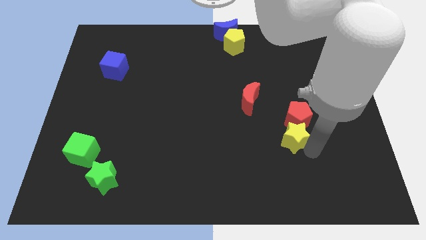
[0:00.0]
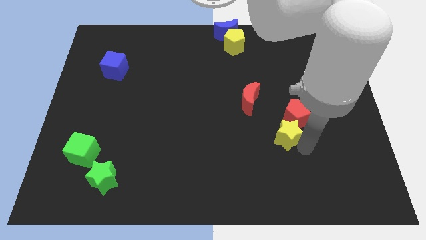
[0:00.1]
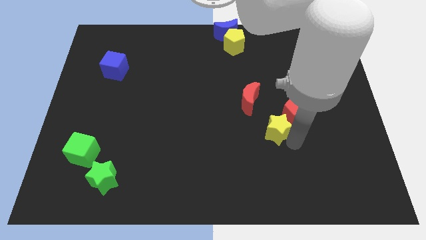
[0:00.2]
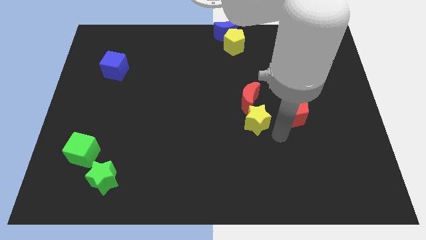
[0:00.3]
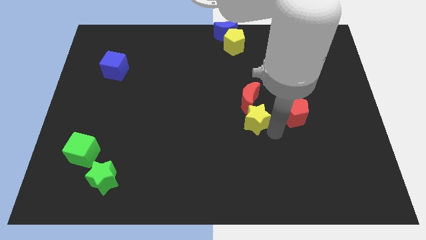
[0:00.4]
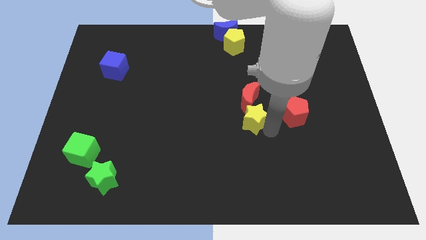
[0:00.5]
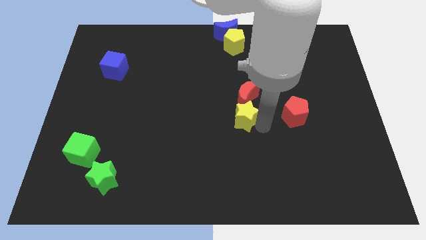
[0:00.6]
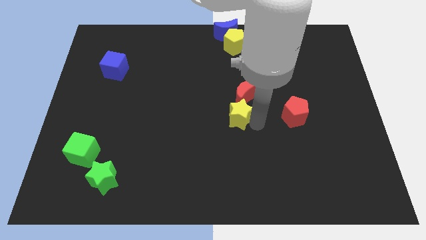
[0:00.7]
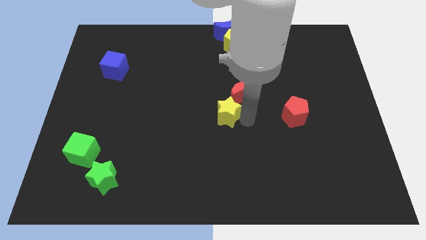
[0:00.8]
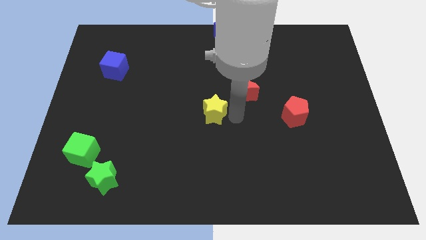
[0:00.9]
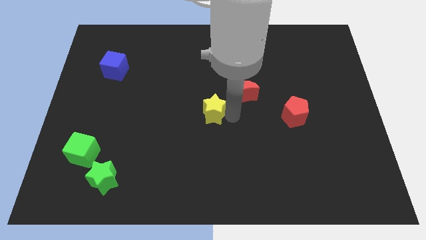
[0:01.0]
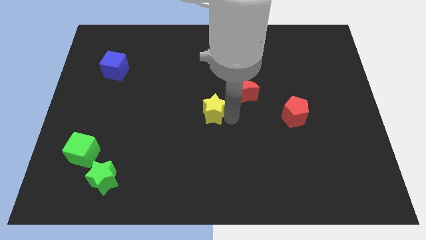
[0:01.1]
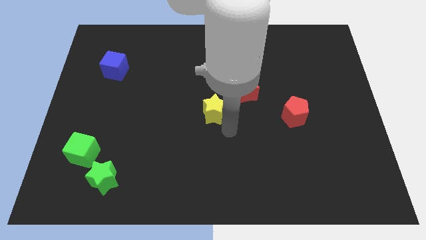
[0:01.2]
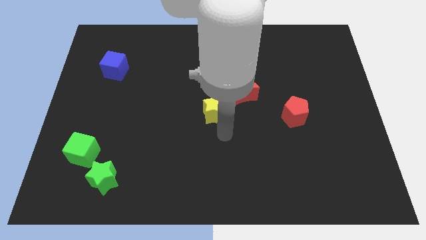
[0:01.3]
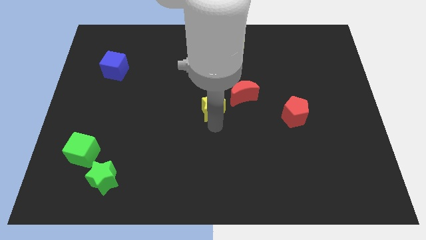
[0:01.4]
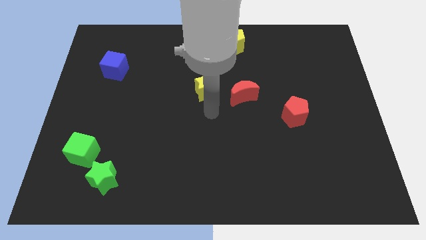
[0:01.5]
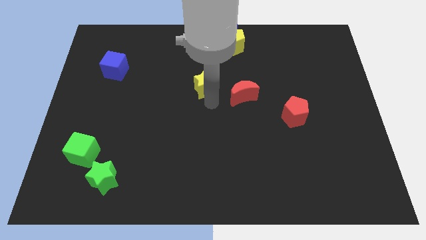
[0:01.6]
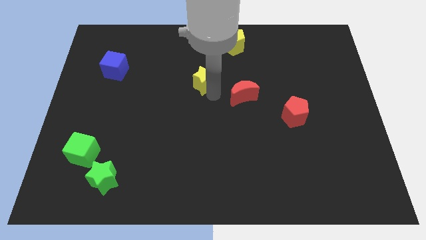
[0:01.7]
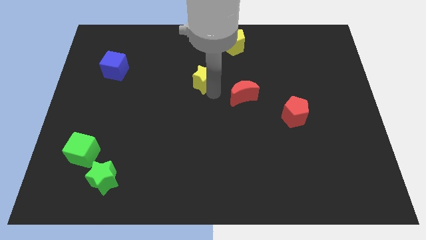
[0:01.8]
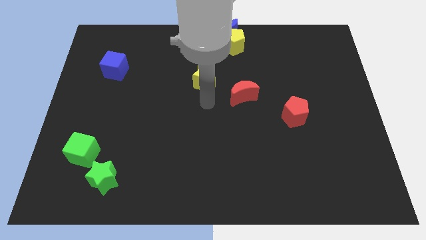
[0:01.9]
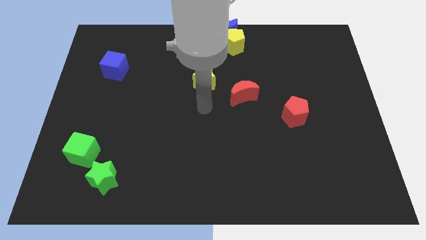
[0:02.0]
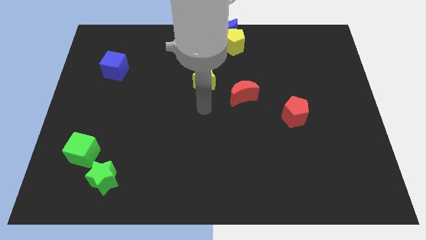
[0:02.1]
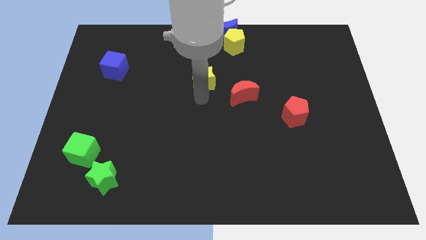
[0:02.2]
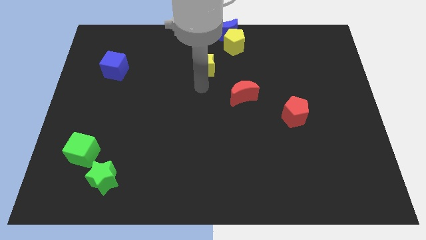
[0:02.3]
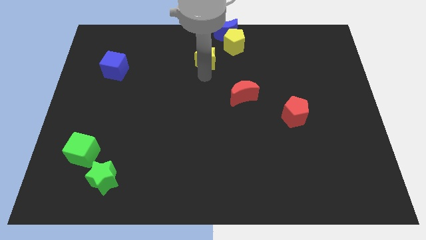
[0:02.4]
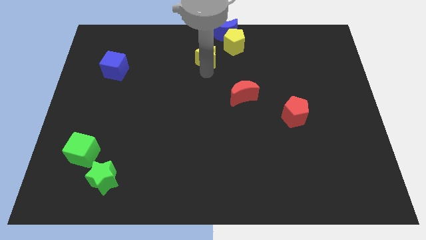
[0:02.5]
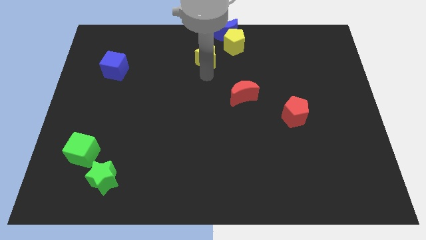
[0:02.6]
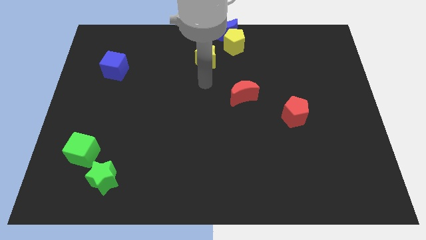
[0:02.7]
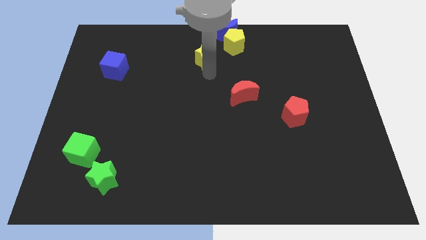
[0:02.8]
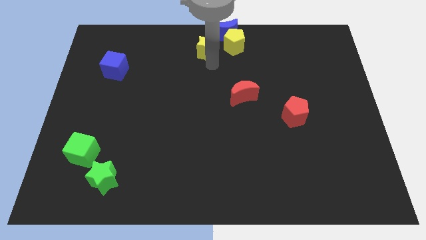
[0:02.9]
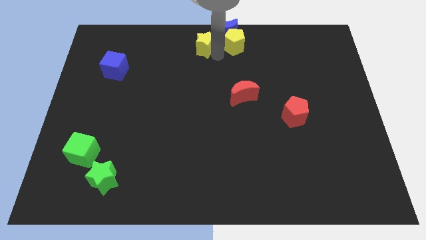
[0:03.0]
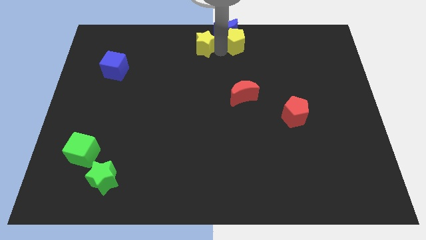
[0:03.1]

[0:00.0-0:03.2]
separate the yellow star from red pentagon

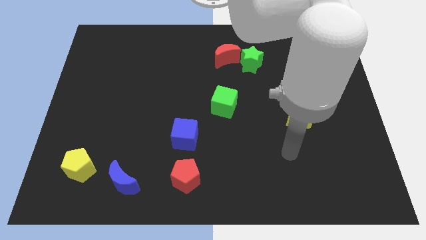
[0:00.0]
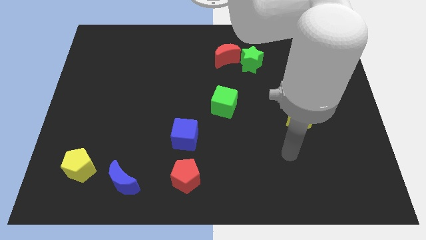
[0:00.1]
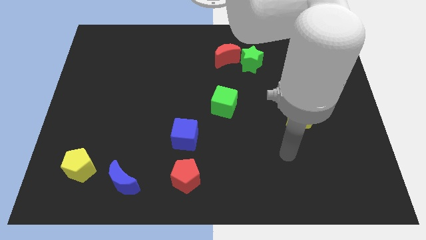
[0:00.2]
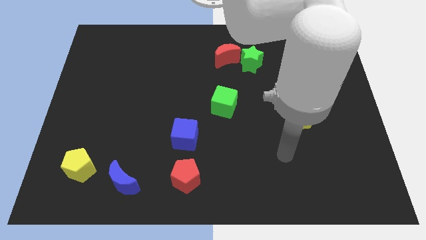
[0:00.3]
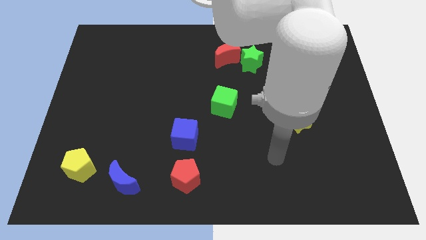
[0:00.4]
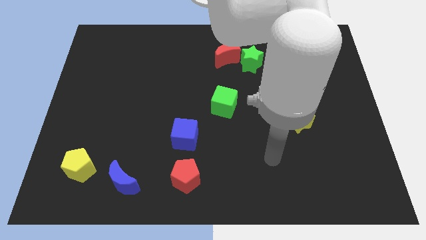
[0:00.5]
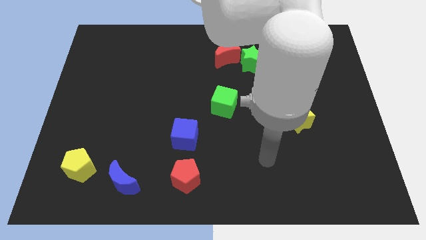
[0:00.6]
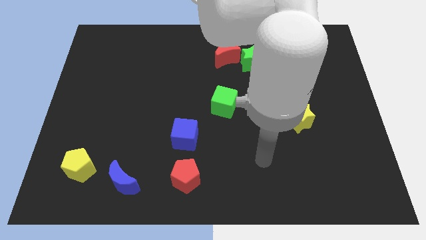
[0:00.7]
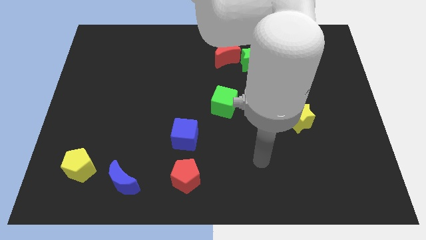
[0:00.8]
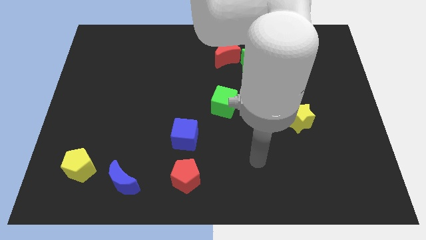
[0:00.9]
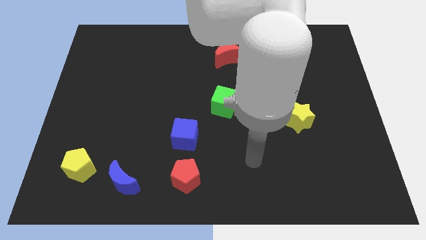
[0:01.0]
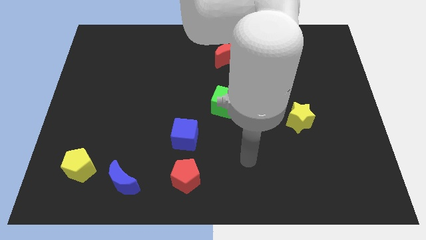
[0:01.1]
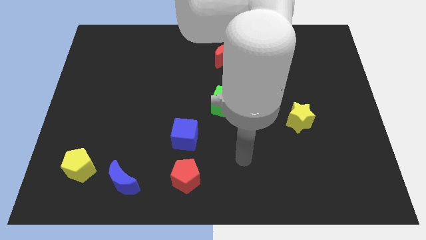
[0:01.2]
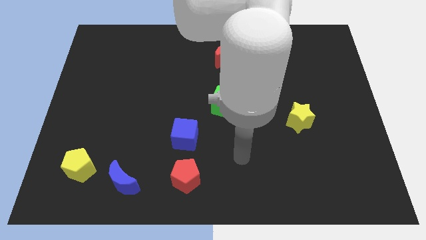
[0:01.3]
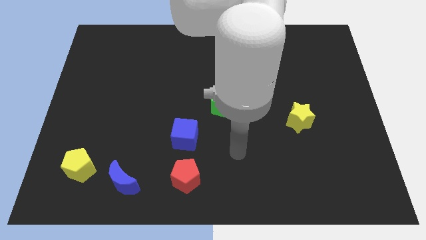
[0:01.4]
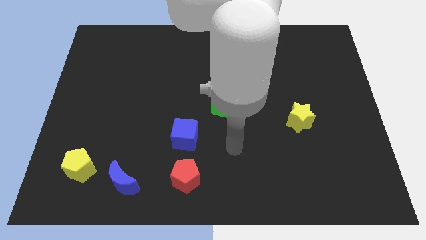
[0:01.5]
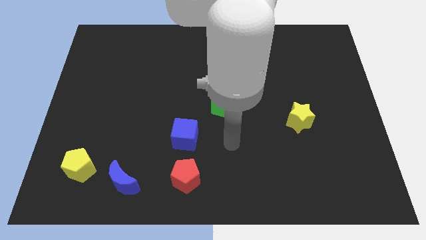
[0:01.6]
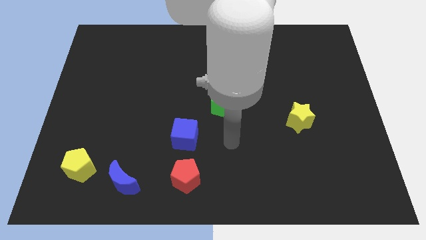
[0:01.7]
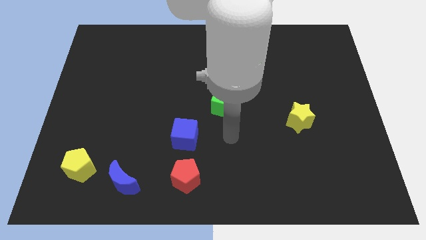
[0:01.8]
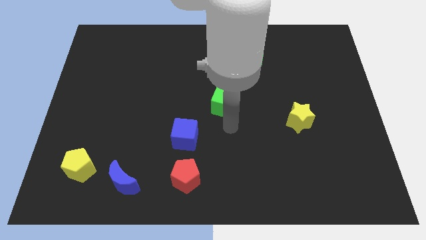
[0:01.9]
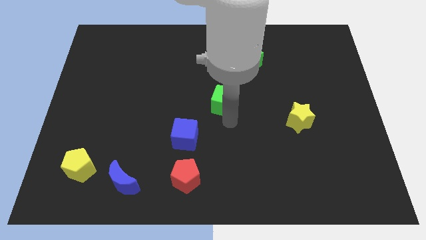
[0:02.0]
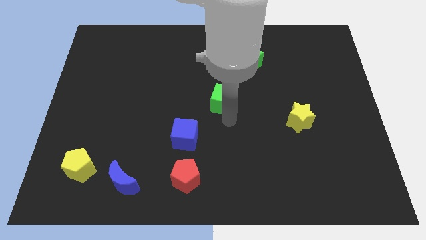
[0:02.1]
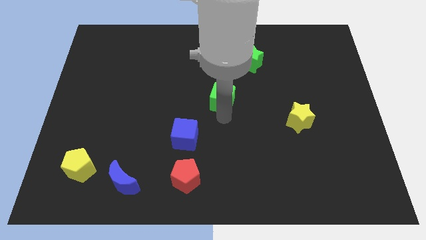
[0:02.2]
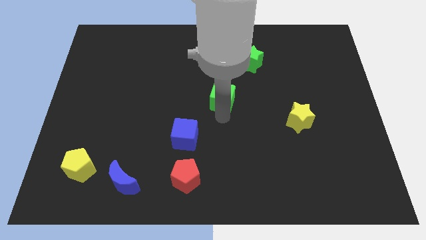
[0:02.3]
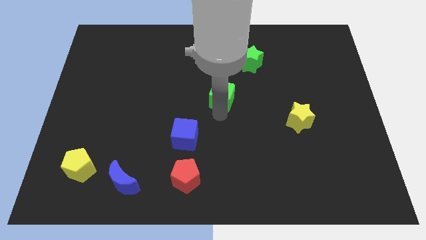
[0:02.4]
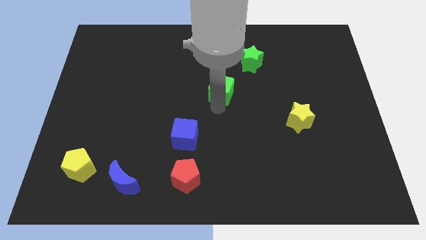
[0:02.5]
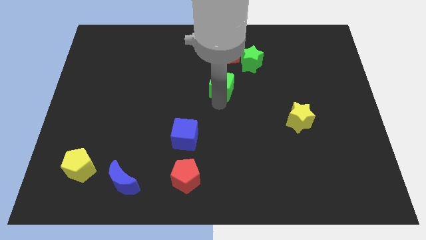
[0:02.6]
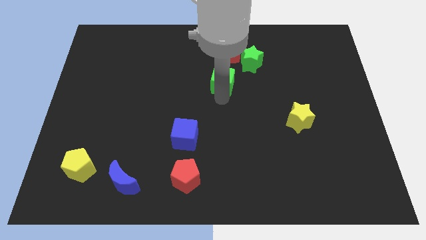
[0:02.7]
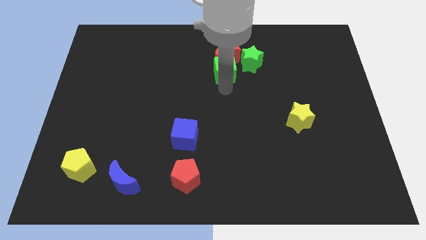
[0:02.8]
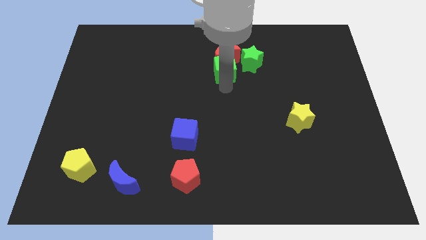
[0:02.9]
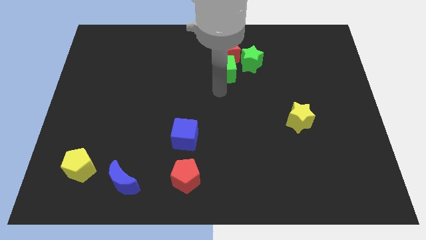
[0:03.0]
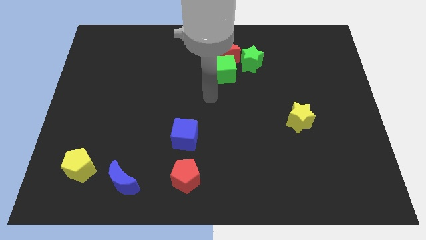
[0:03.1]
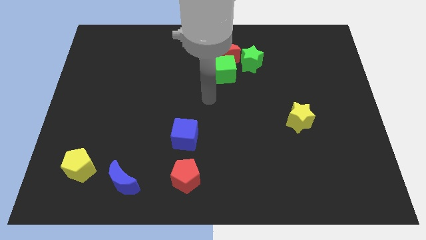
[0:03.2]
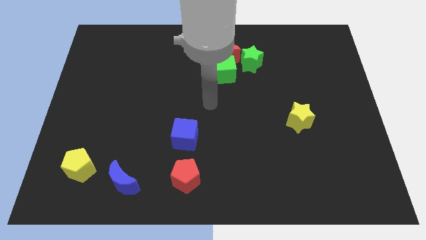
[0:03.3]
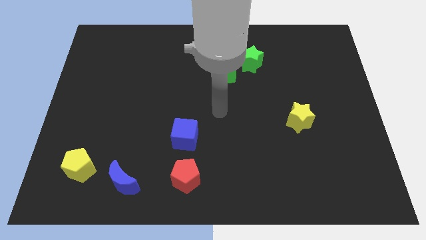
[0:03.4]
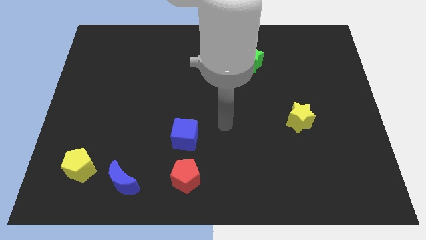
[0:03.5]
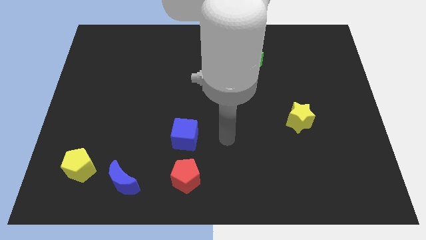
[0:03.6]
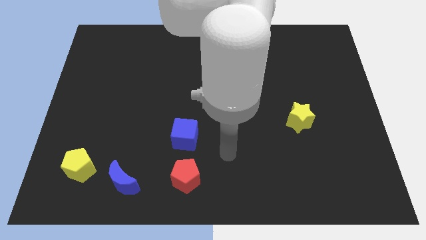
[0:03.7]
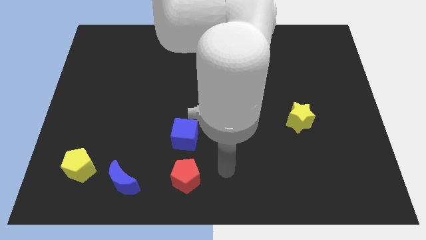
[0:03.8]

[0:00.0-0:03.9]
move the green cube to the bottom side of the red moon

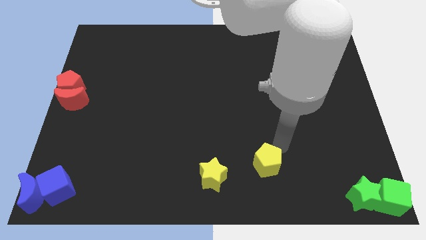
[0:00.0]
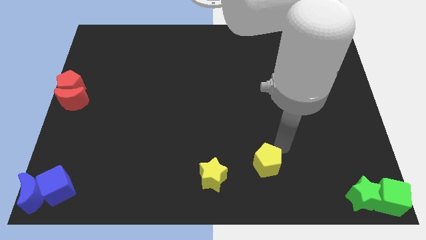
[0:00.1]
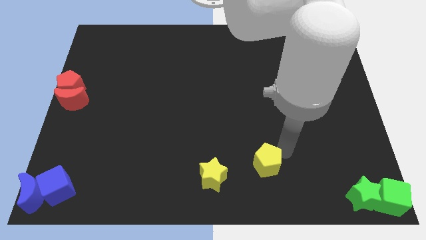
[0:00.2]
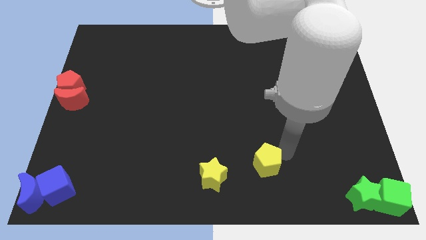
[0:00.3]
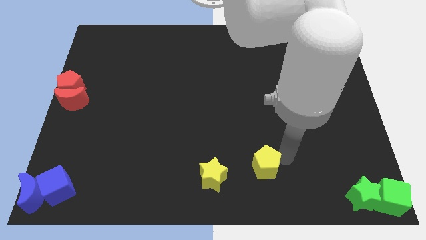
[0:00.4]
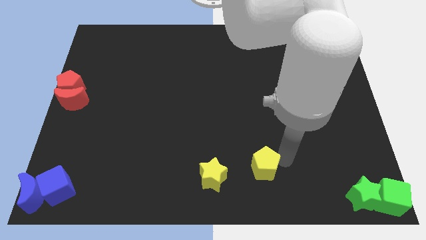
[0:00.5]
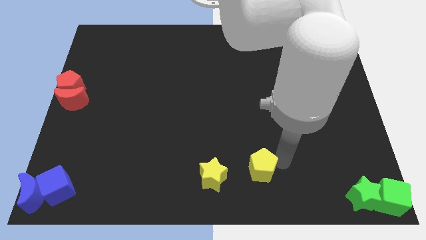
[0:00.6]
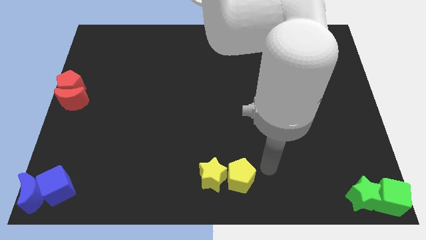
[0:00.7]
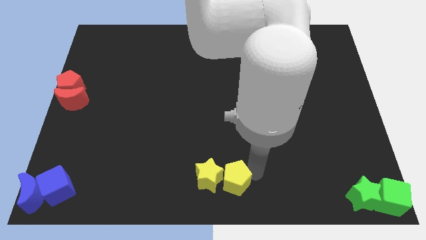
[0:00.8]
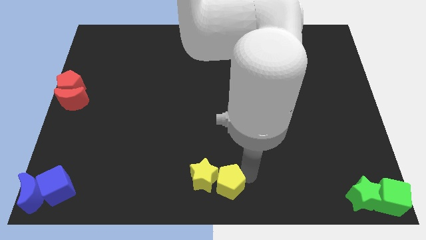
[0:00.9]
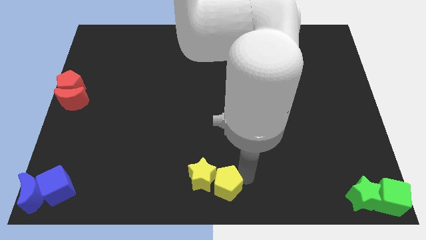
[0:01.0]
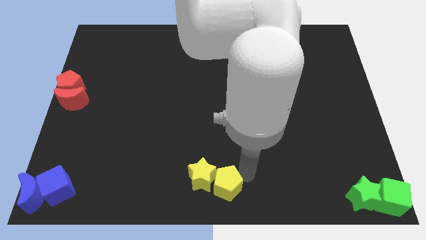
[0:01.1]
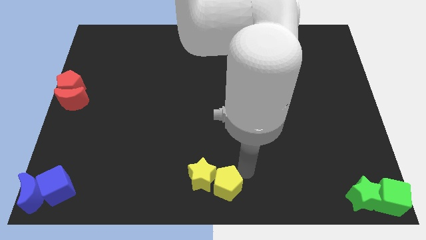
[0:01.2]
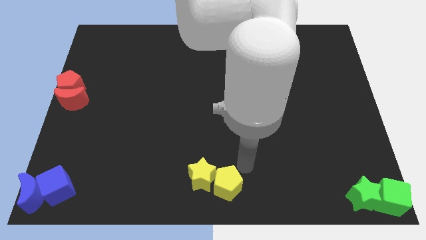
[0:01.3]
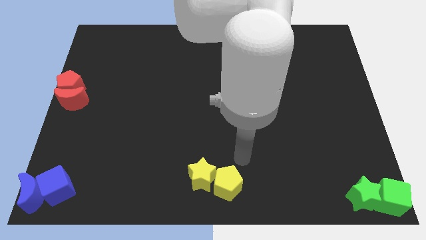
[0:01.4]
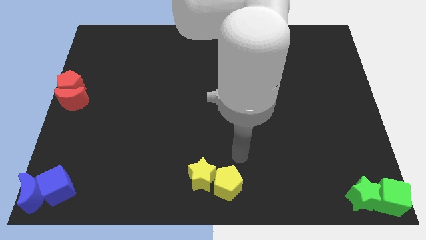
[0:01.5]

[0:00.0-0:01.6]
push the yellow pentagon into the yellow star

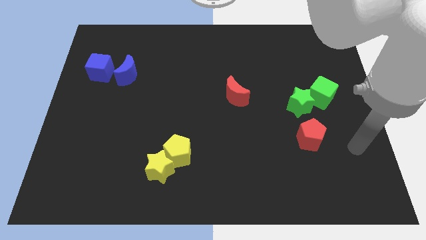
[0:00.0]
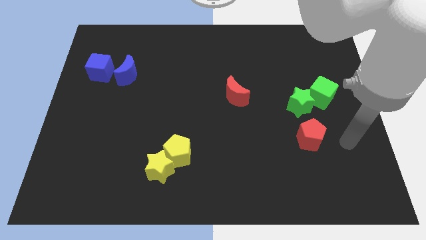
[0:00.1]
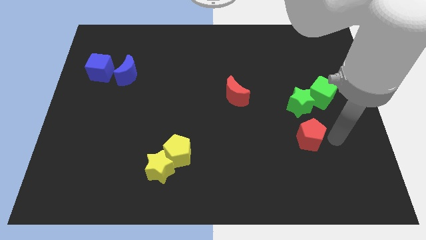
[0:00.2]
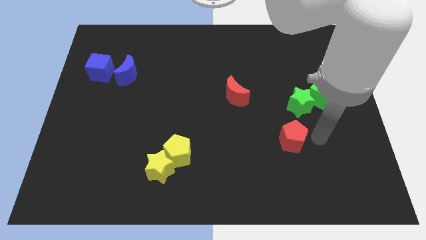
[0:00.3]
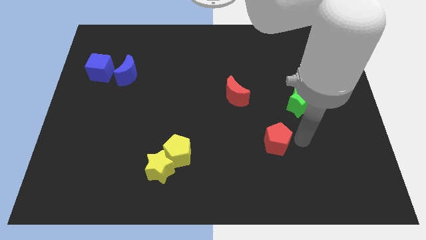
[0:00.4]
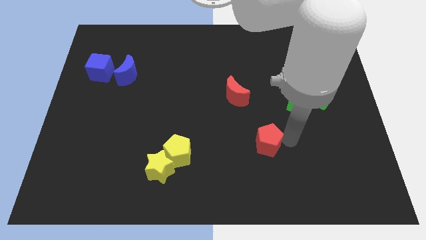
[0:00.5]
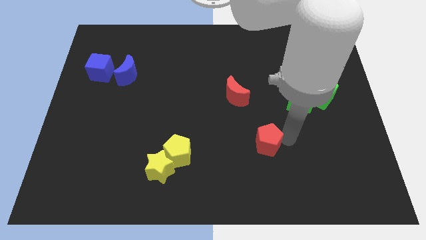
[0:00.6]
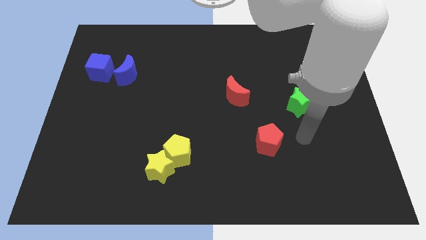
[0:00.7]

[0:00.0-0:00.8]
push the red pentagon towards the red crescent
